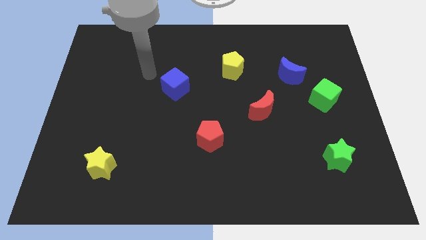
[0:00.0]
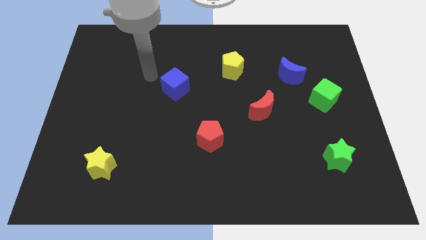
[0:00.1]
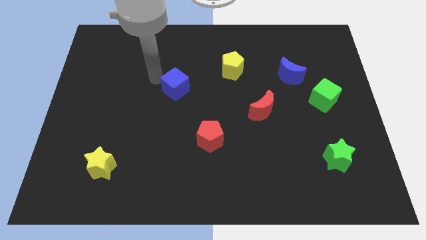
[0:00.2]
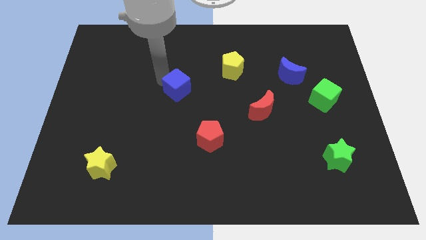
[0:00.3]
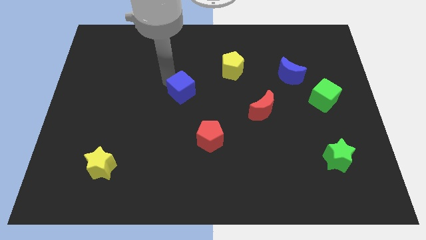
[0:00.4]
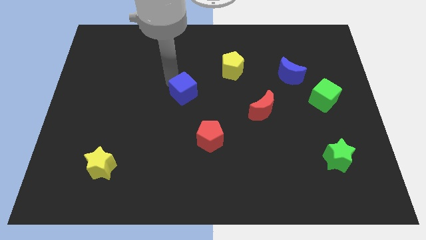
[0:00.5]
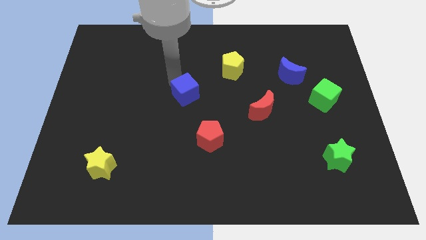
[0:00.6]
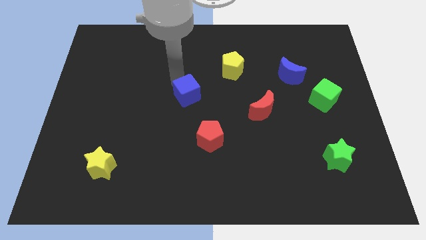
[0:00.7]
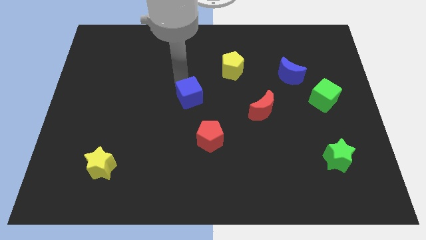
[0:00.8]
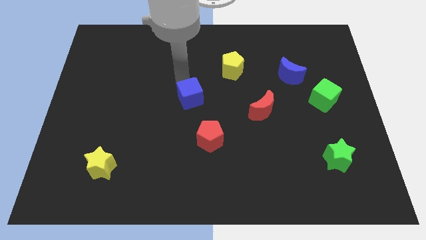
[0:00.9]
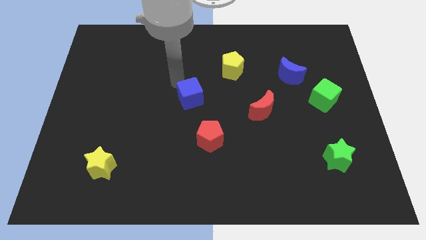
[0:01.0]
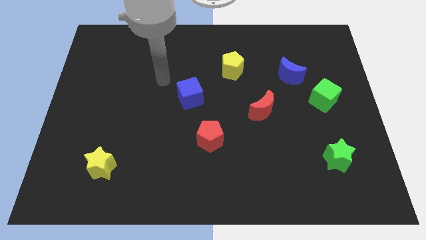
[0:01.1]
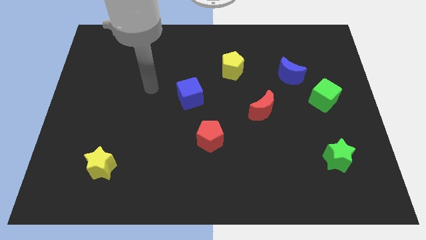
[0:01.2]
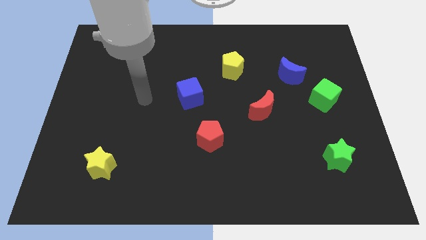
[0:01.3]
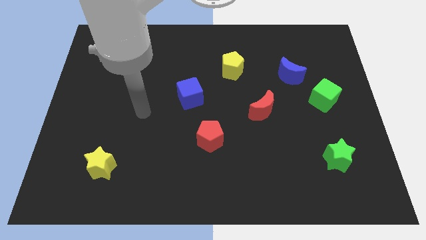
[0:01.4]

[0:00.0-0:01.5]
push the blue cube downwards slightly

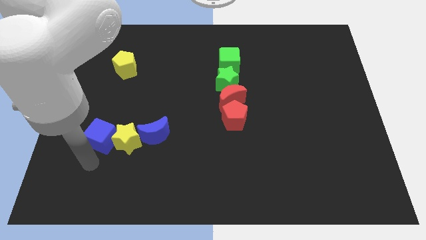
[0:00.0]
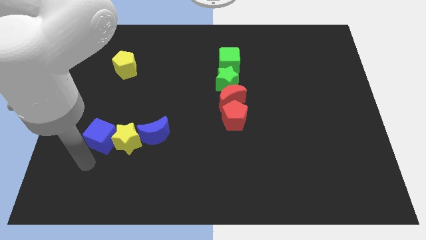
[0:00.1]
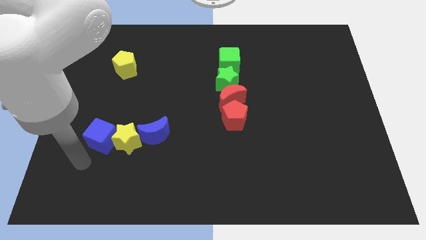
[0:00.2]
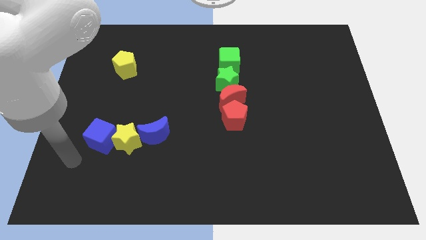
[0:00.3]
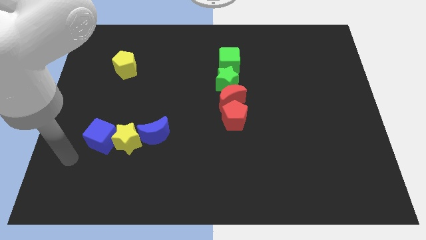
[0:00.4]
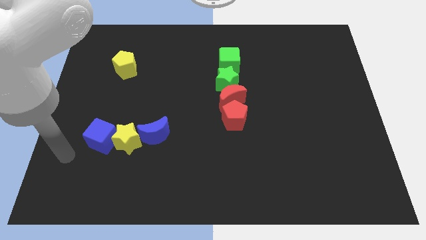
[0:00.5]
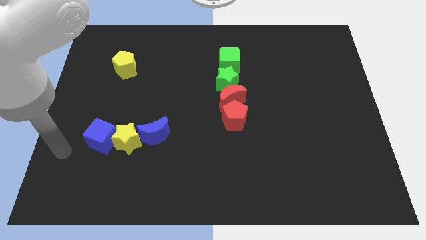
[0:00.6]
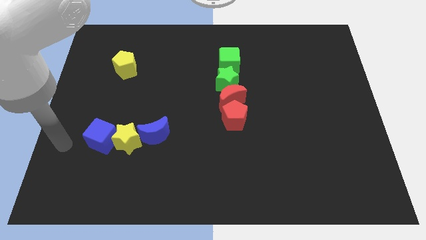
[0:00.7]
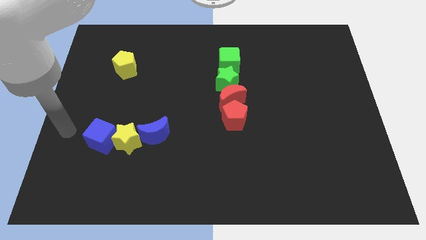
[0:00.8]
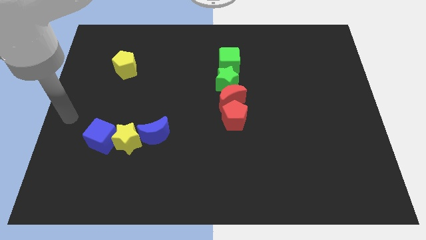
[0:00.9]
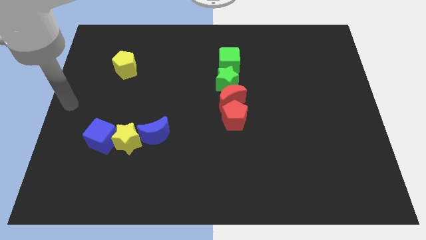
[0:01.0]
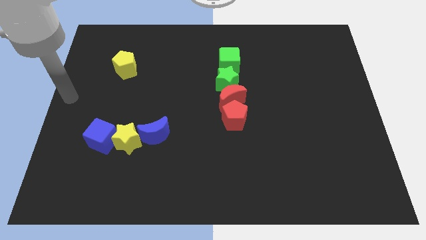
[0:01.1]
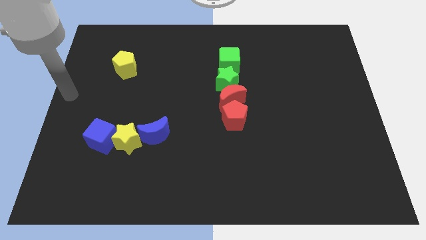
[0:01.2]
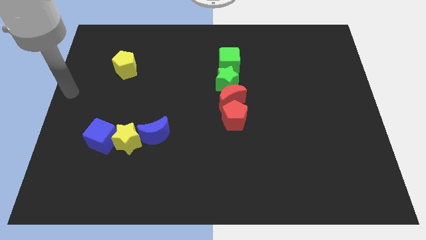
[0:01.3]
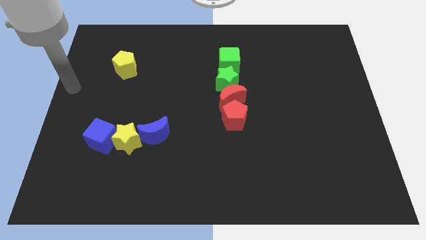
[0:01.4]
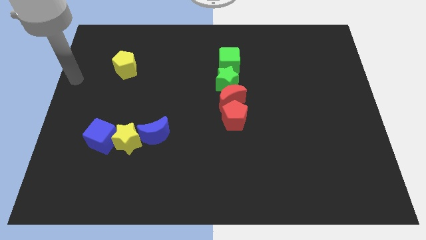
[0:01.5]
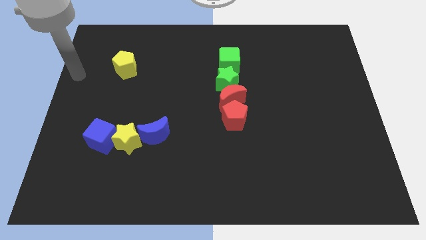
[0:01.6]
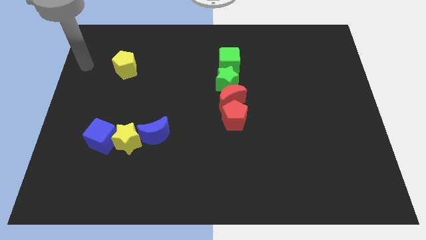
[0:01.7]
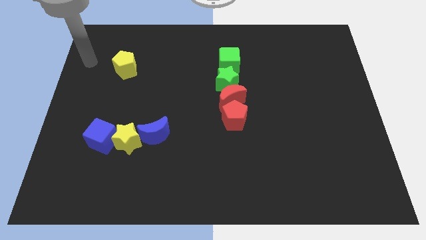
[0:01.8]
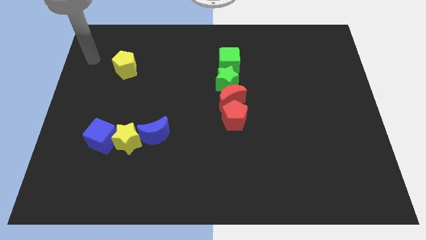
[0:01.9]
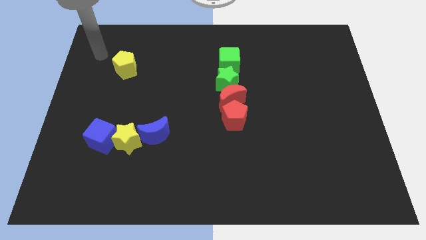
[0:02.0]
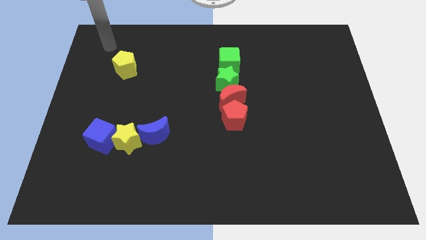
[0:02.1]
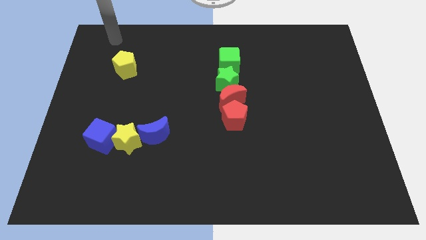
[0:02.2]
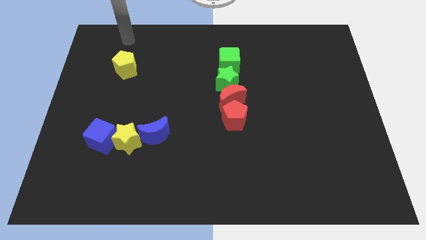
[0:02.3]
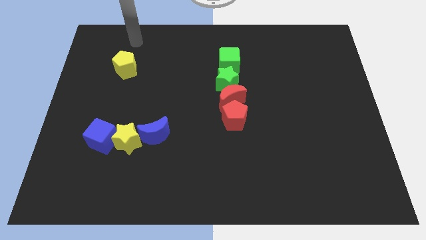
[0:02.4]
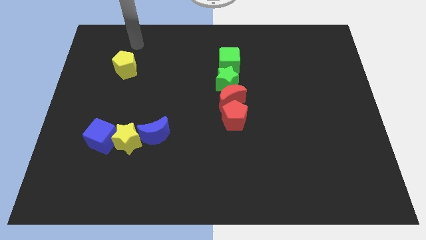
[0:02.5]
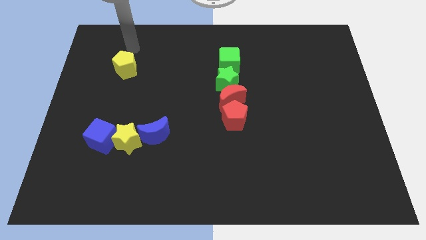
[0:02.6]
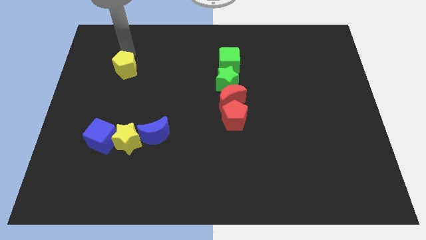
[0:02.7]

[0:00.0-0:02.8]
place your arm at the top side of the yellow pentagon

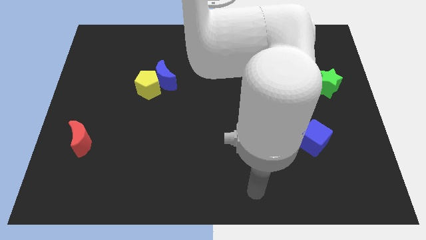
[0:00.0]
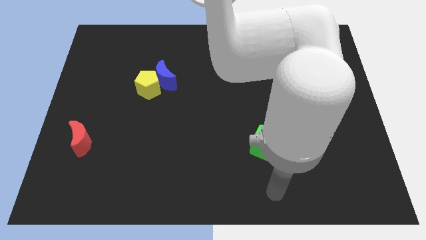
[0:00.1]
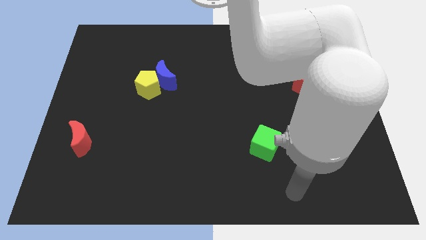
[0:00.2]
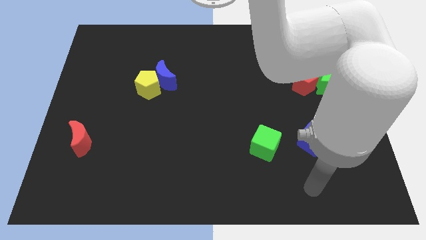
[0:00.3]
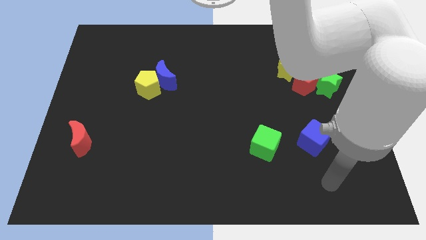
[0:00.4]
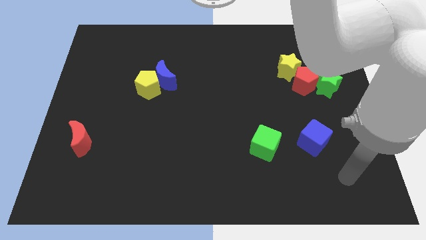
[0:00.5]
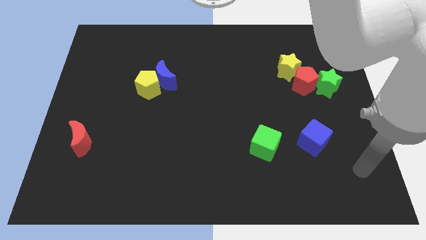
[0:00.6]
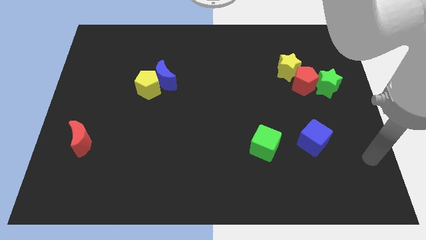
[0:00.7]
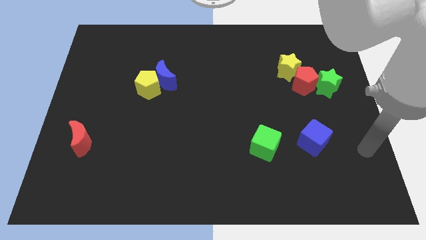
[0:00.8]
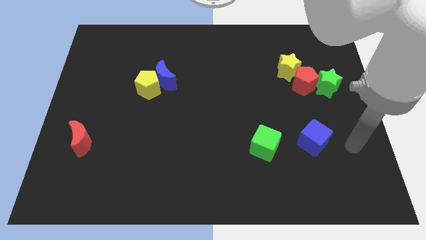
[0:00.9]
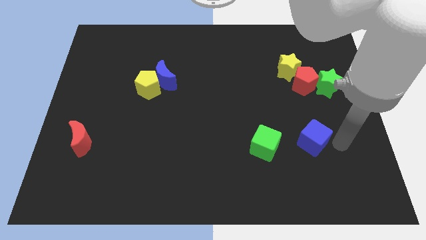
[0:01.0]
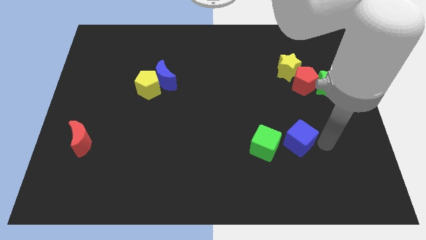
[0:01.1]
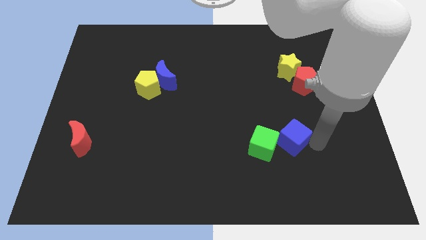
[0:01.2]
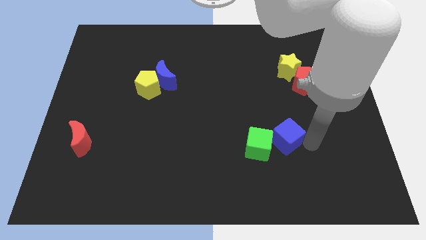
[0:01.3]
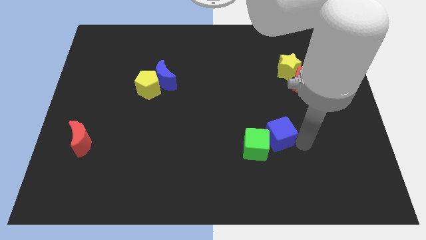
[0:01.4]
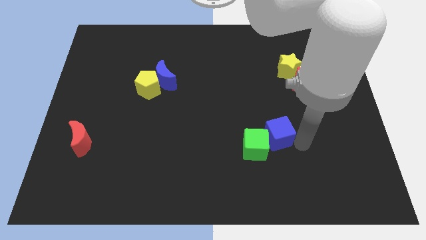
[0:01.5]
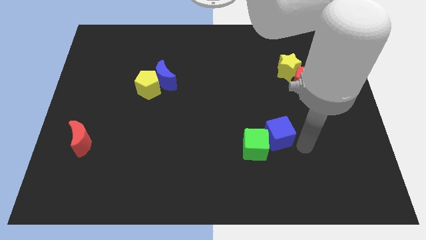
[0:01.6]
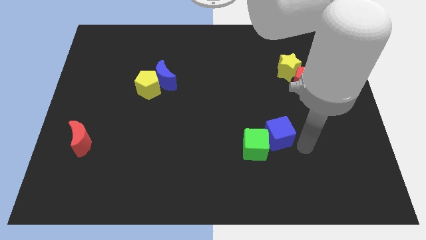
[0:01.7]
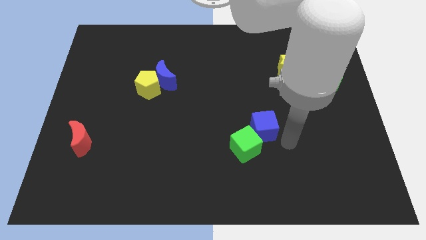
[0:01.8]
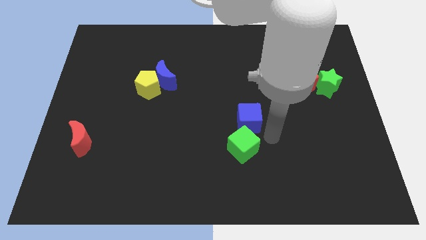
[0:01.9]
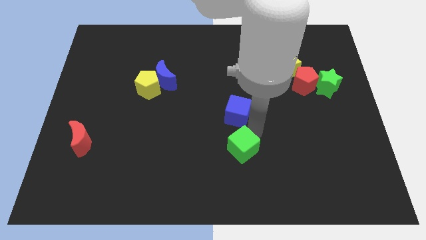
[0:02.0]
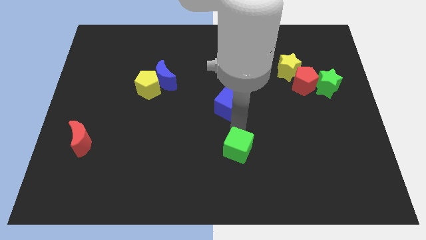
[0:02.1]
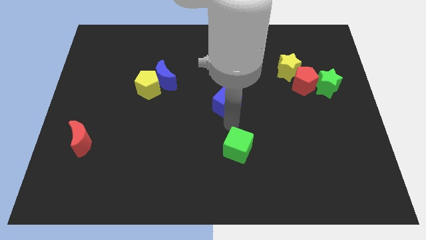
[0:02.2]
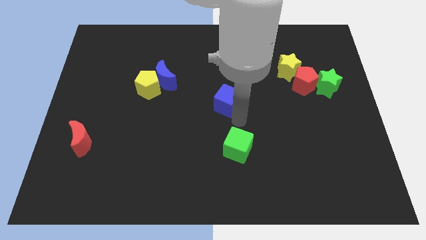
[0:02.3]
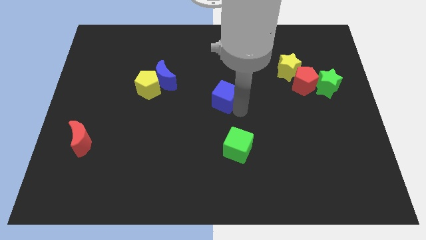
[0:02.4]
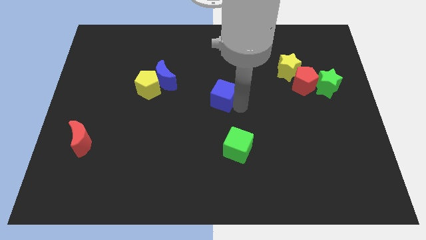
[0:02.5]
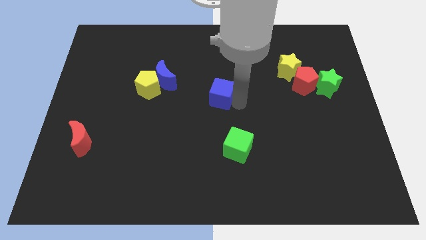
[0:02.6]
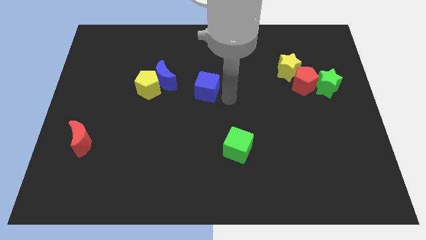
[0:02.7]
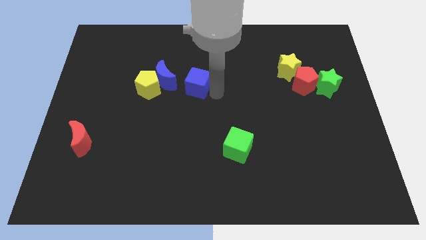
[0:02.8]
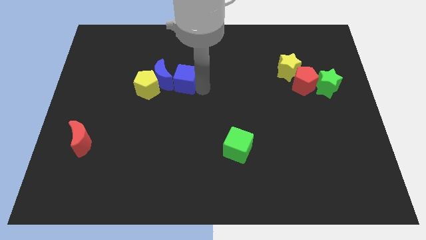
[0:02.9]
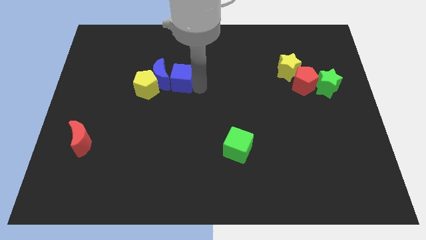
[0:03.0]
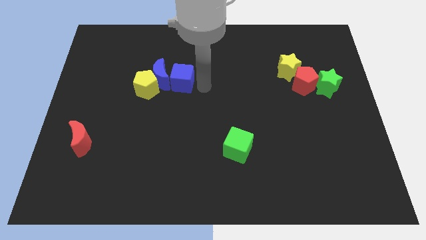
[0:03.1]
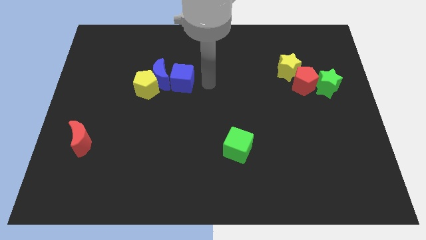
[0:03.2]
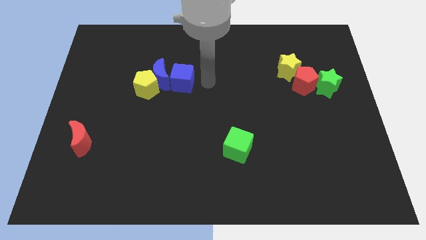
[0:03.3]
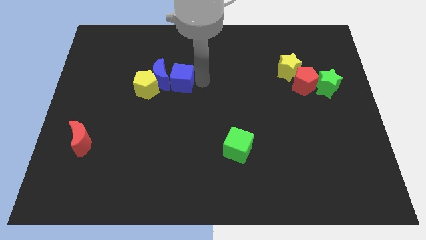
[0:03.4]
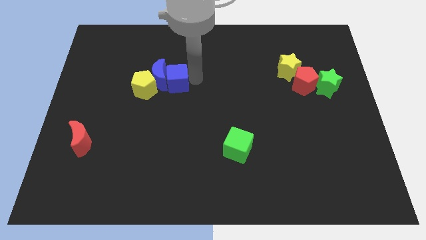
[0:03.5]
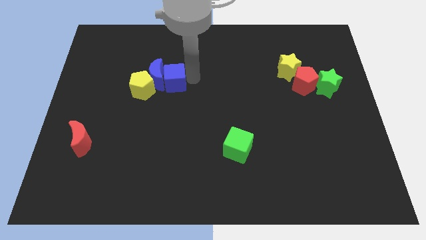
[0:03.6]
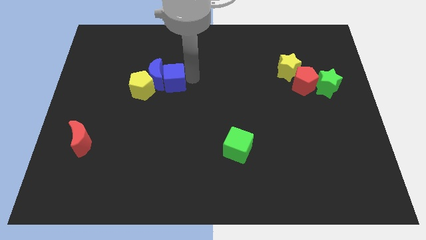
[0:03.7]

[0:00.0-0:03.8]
slightly move both the cubes towards left

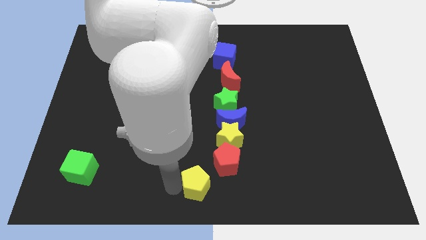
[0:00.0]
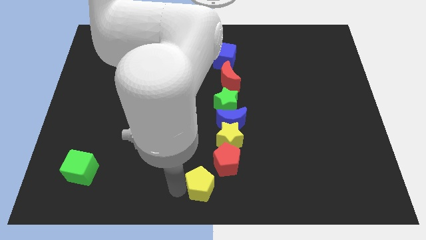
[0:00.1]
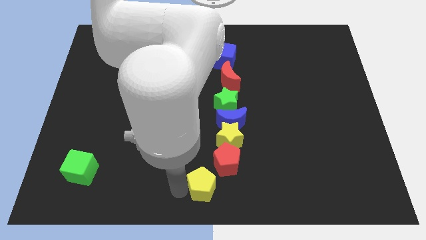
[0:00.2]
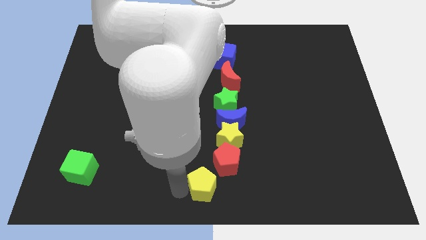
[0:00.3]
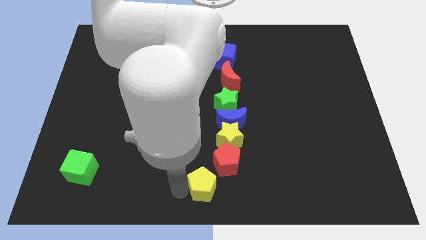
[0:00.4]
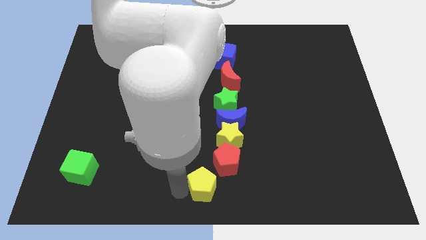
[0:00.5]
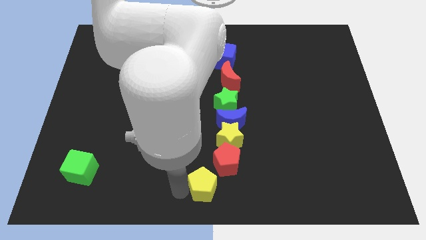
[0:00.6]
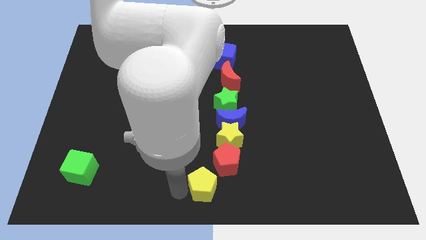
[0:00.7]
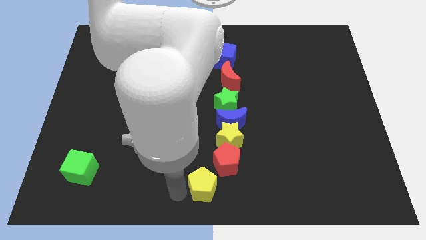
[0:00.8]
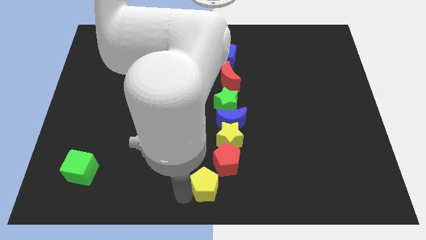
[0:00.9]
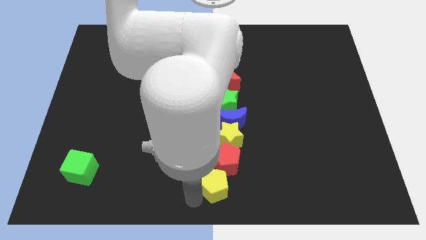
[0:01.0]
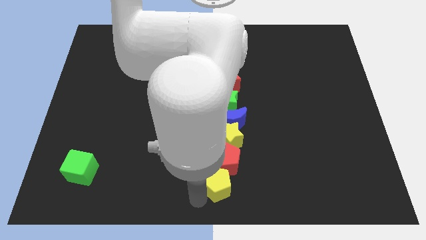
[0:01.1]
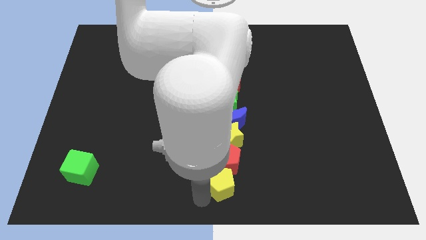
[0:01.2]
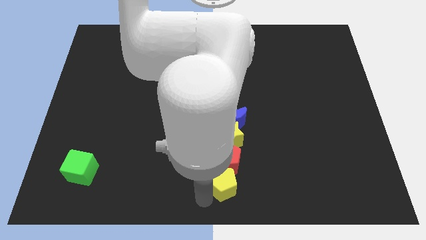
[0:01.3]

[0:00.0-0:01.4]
place the yellow pentagon below the red pentagon to form a vertical line
